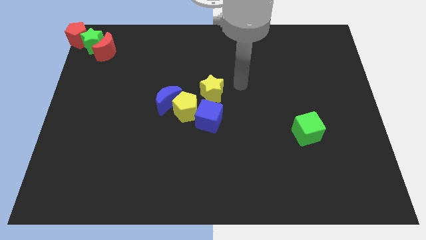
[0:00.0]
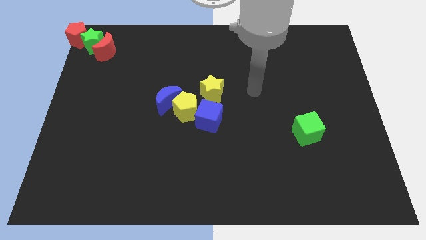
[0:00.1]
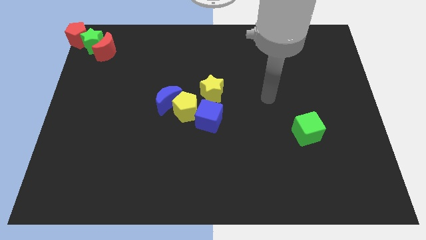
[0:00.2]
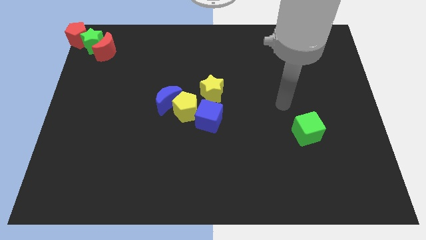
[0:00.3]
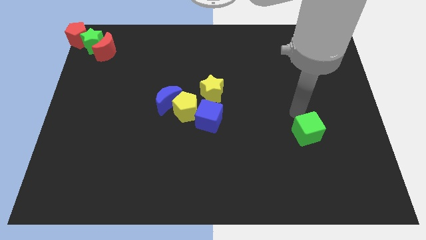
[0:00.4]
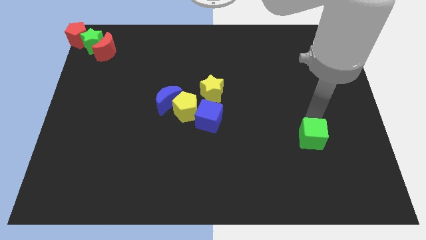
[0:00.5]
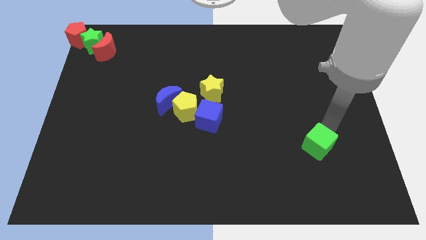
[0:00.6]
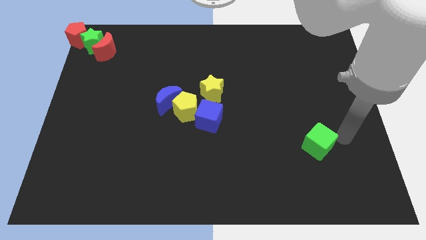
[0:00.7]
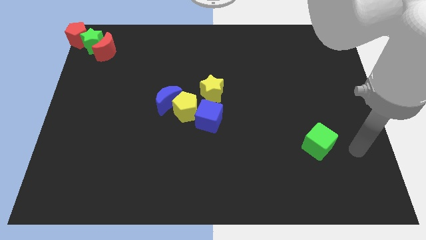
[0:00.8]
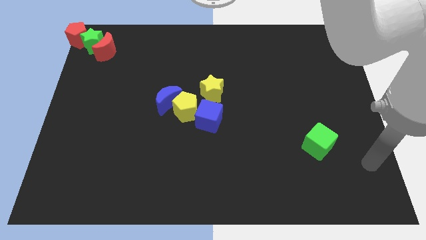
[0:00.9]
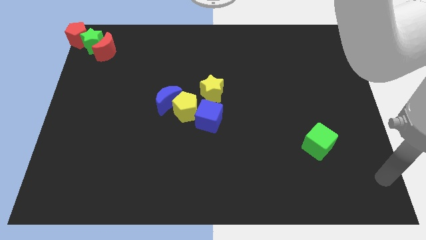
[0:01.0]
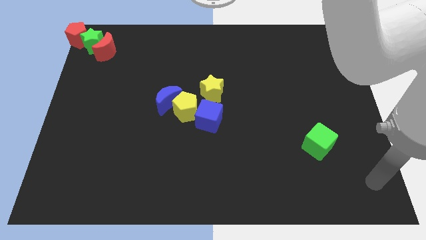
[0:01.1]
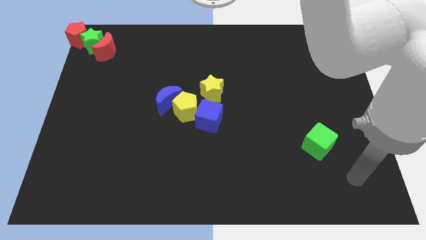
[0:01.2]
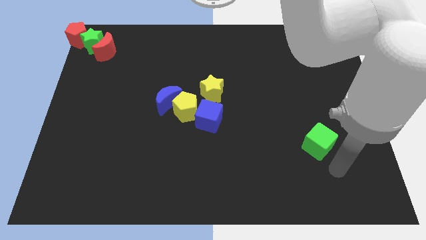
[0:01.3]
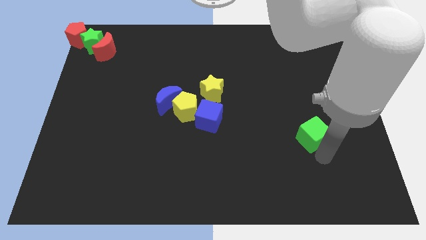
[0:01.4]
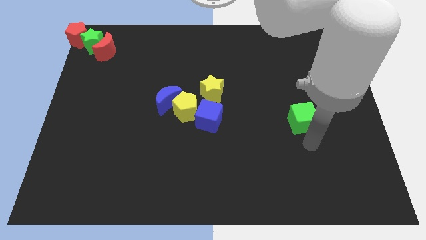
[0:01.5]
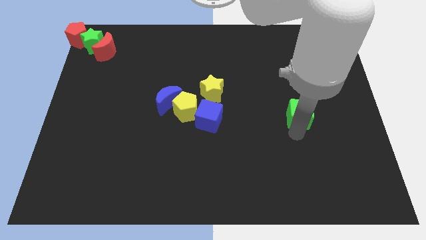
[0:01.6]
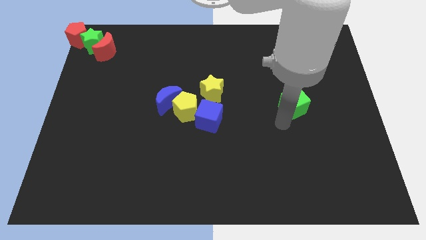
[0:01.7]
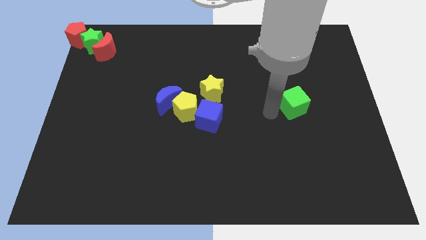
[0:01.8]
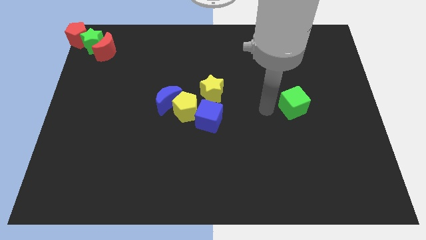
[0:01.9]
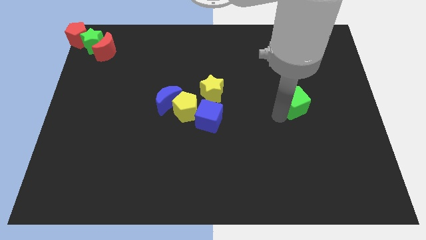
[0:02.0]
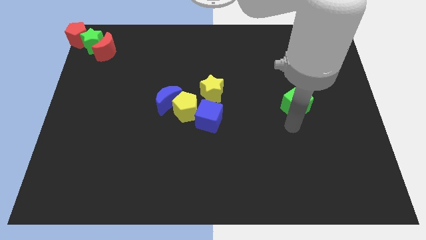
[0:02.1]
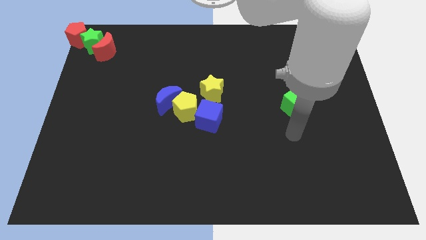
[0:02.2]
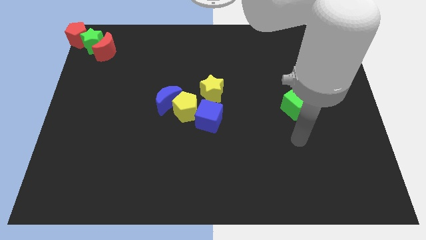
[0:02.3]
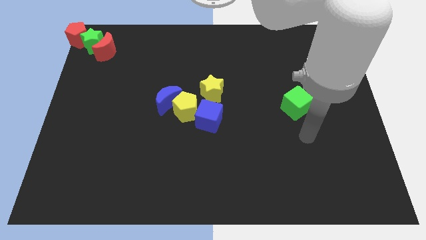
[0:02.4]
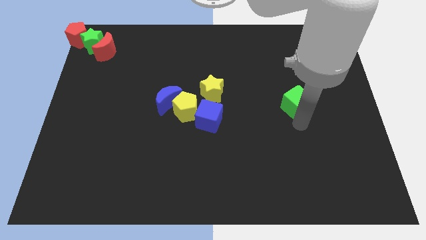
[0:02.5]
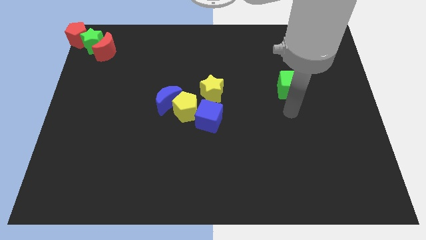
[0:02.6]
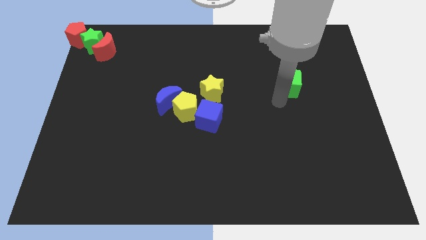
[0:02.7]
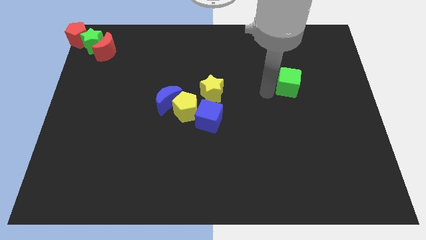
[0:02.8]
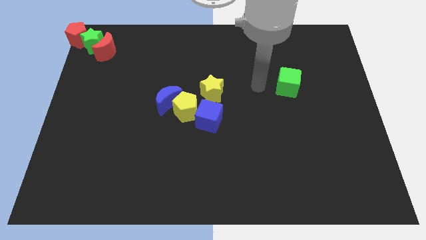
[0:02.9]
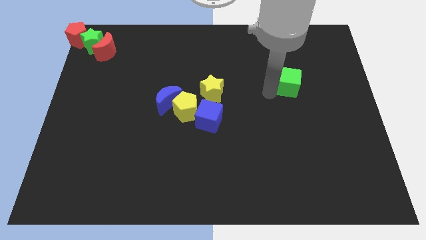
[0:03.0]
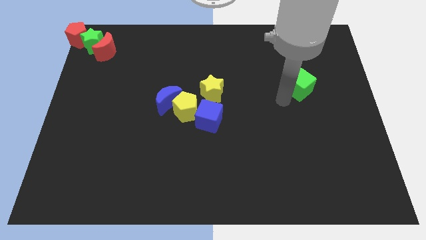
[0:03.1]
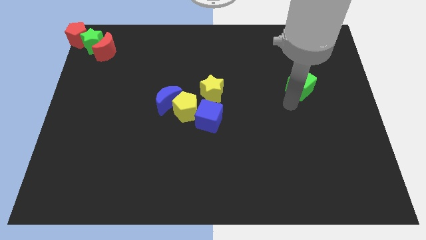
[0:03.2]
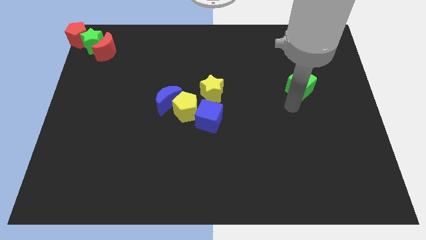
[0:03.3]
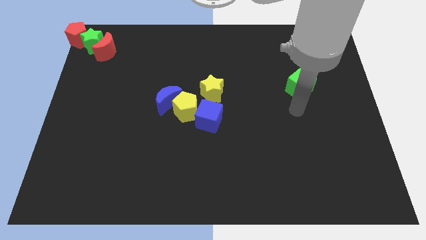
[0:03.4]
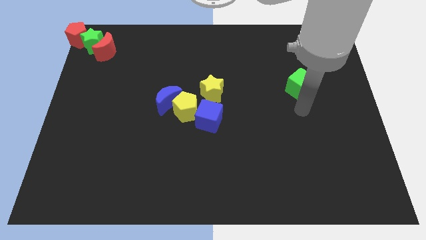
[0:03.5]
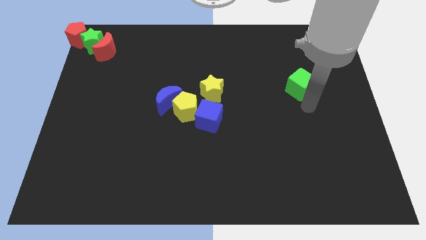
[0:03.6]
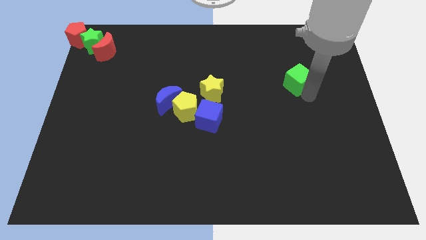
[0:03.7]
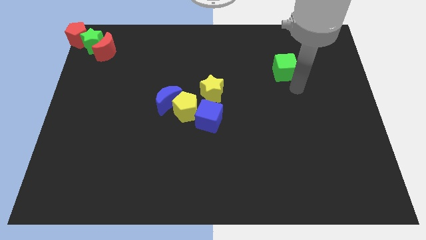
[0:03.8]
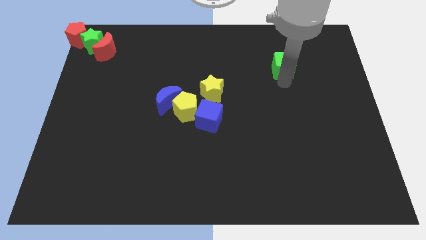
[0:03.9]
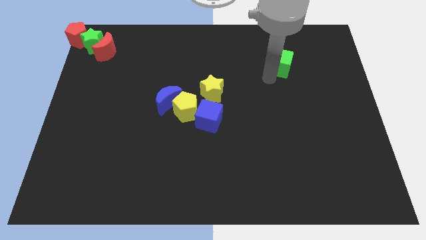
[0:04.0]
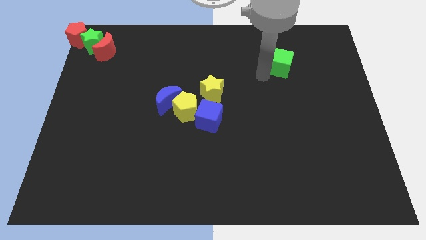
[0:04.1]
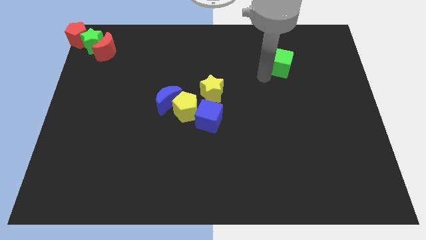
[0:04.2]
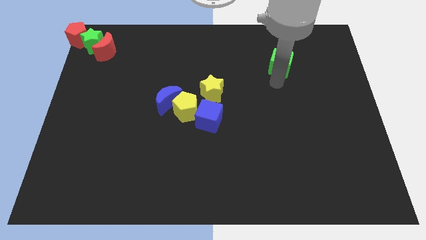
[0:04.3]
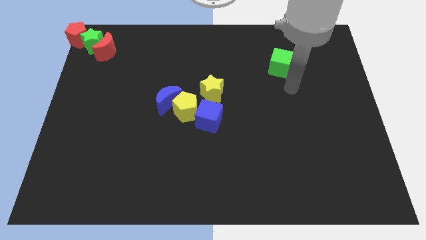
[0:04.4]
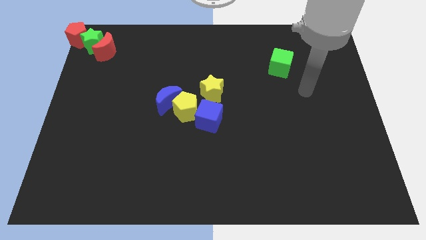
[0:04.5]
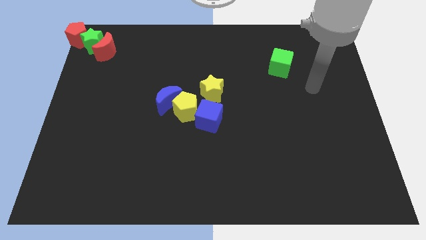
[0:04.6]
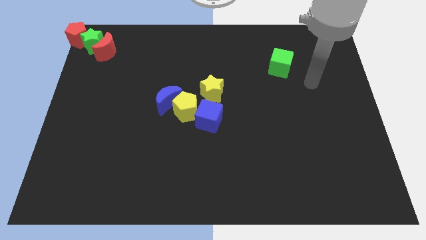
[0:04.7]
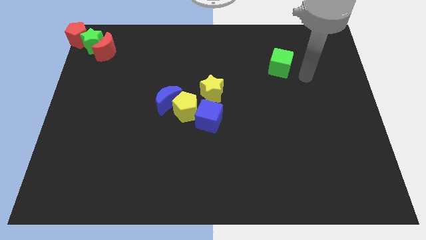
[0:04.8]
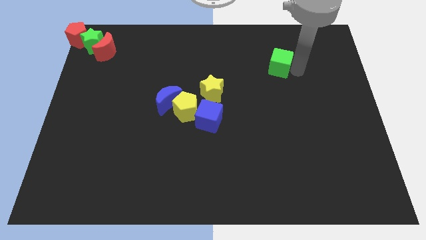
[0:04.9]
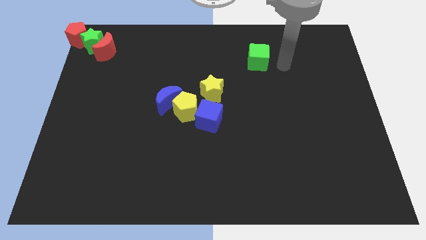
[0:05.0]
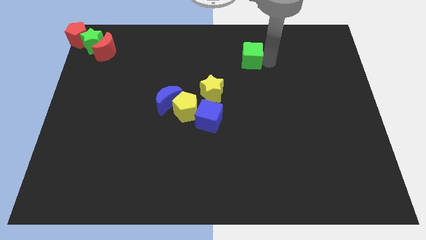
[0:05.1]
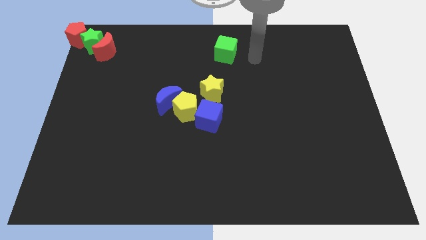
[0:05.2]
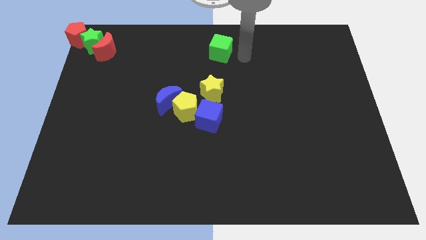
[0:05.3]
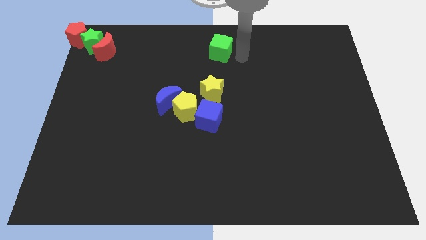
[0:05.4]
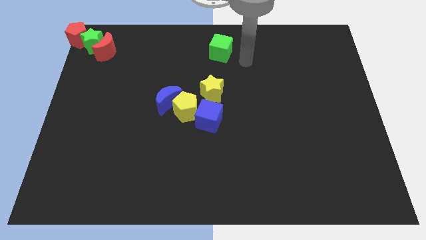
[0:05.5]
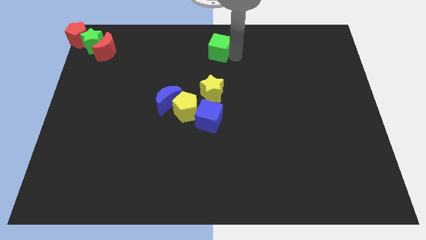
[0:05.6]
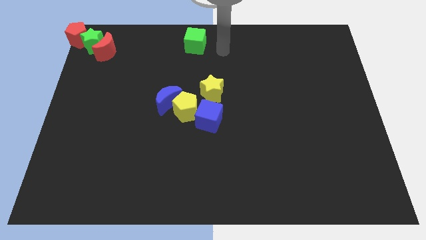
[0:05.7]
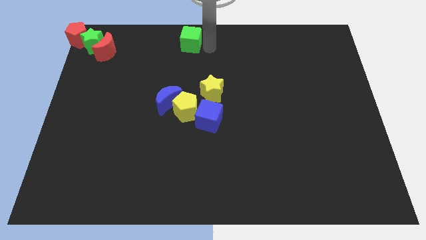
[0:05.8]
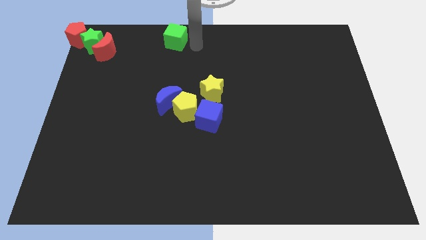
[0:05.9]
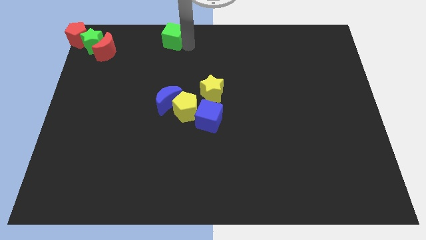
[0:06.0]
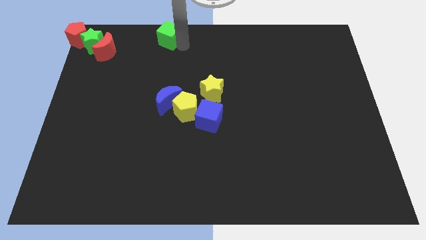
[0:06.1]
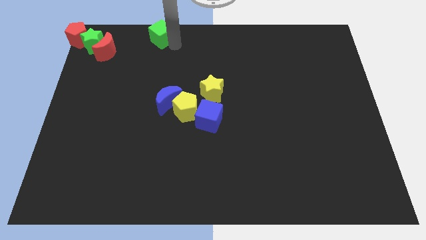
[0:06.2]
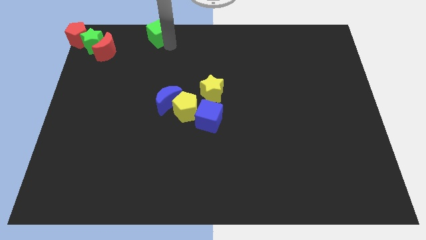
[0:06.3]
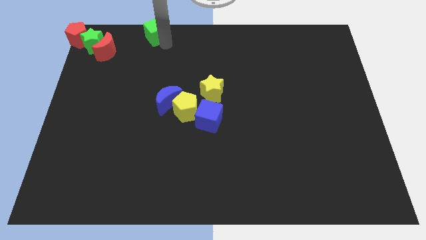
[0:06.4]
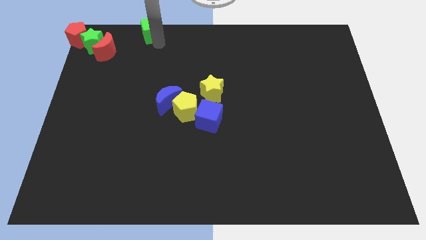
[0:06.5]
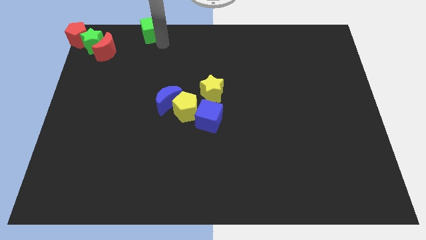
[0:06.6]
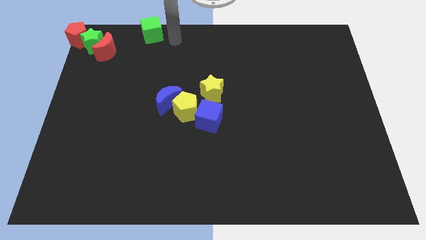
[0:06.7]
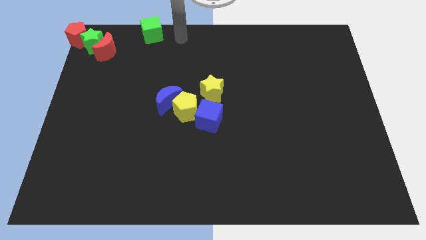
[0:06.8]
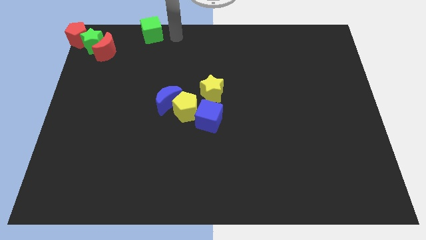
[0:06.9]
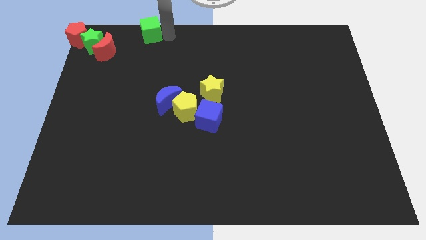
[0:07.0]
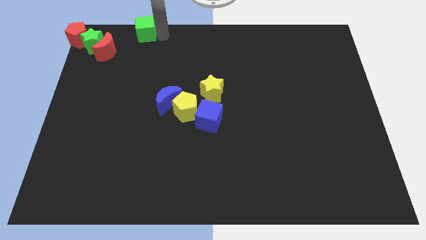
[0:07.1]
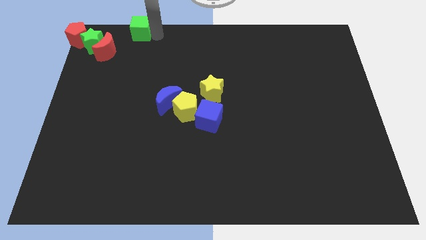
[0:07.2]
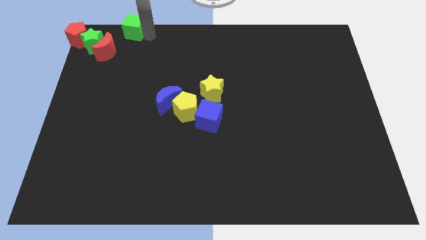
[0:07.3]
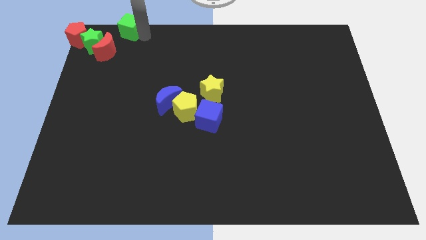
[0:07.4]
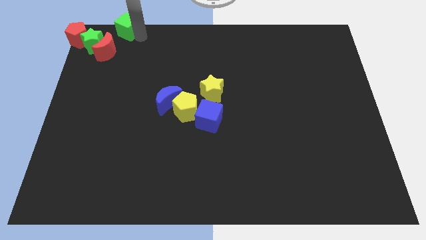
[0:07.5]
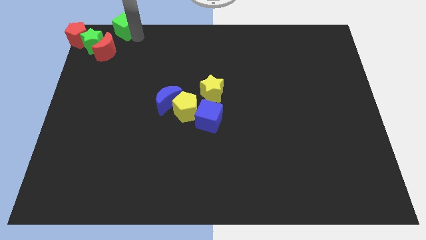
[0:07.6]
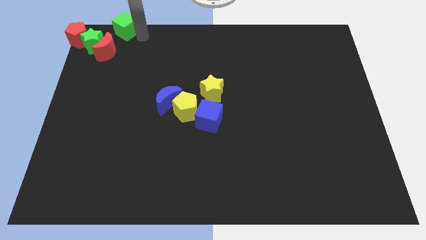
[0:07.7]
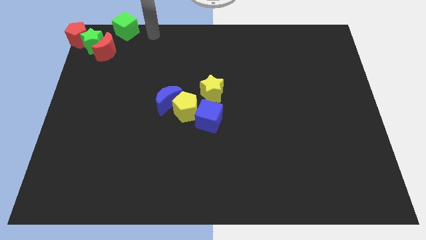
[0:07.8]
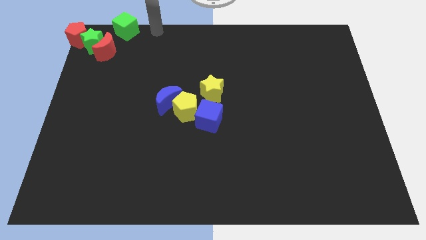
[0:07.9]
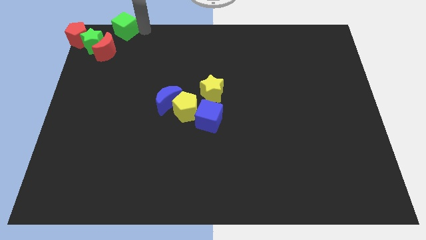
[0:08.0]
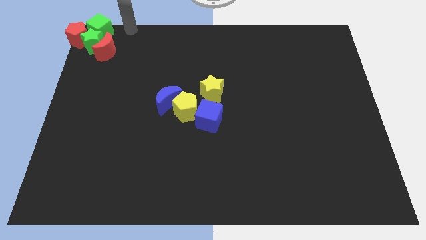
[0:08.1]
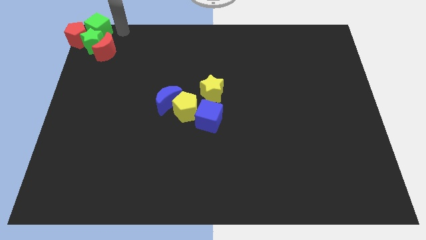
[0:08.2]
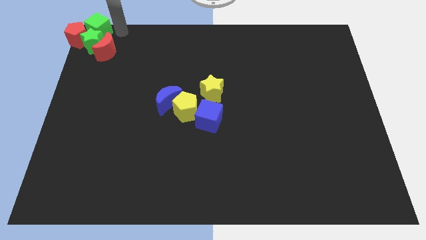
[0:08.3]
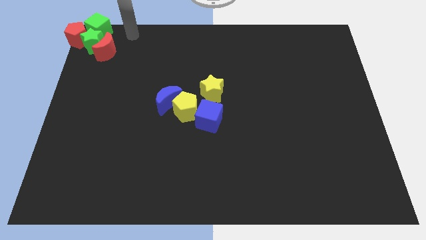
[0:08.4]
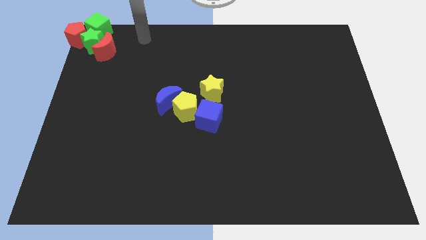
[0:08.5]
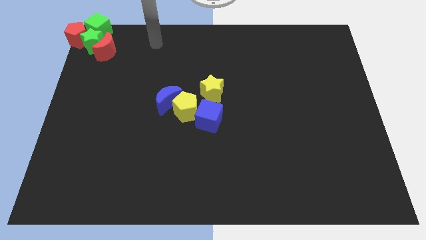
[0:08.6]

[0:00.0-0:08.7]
move the green cube to top left of the board

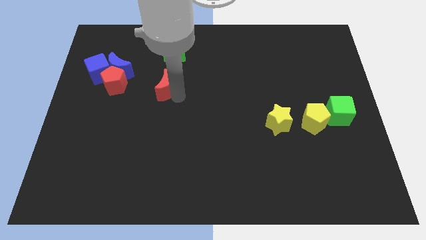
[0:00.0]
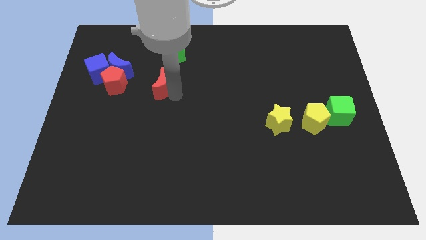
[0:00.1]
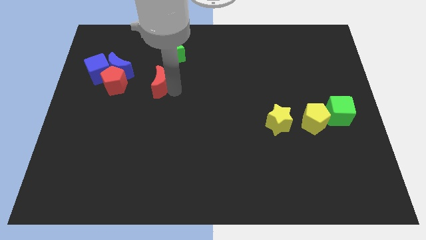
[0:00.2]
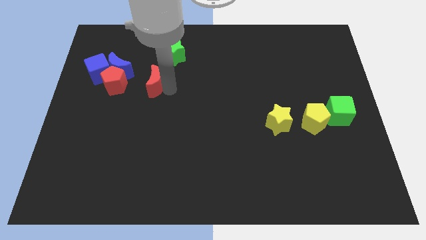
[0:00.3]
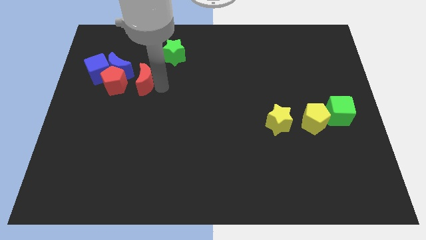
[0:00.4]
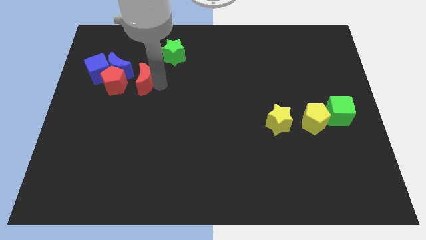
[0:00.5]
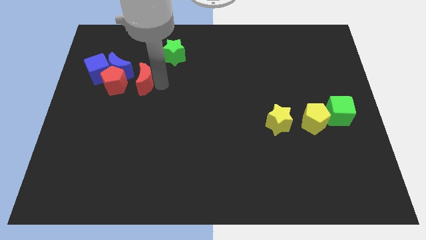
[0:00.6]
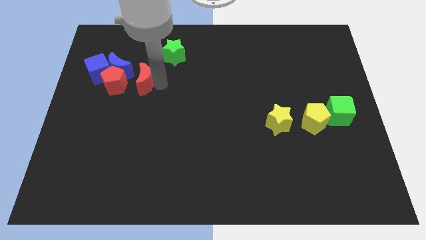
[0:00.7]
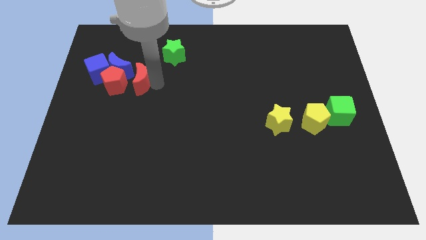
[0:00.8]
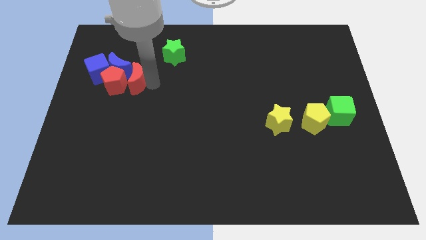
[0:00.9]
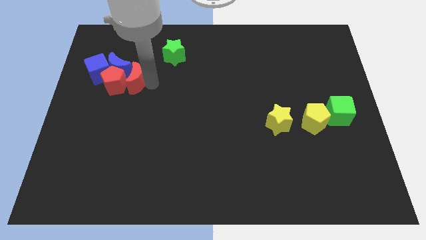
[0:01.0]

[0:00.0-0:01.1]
move red moon close to red pentagon
